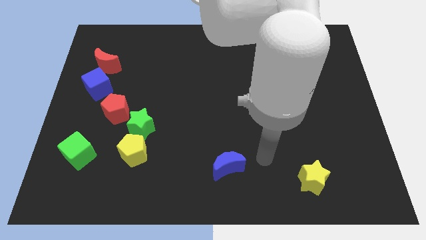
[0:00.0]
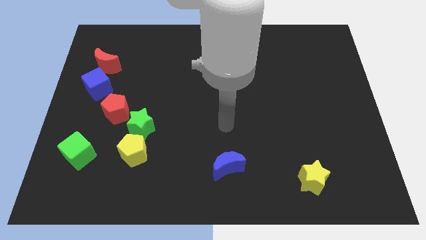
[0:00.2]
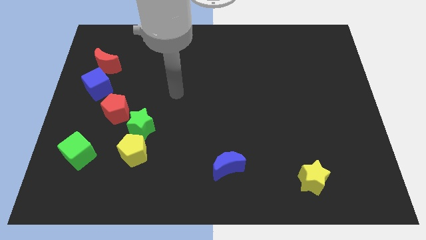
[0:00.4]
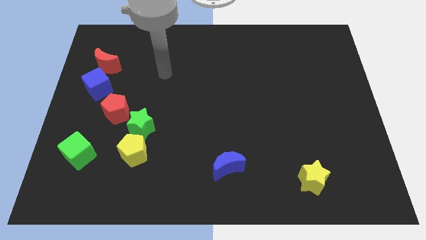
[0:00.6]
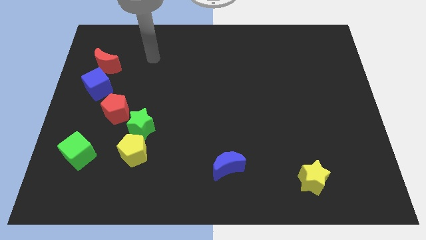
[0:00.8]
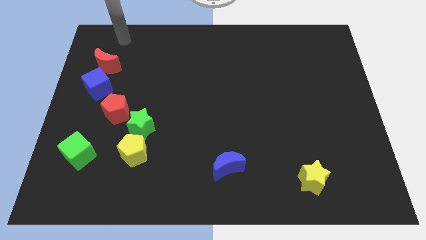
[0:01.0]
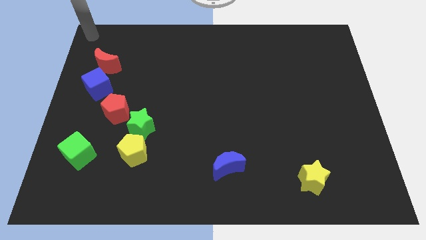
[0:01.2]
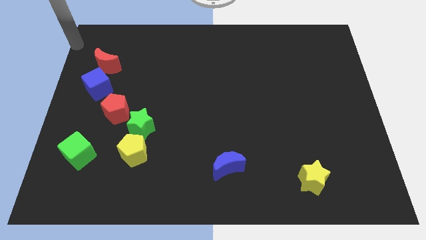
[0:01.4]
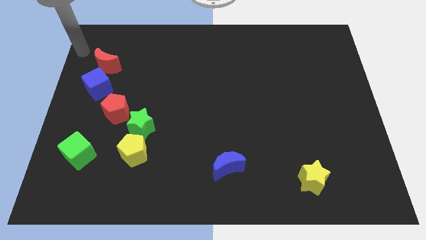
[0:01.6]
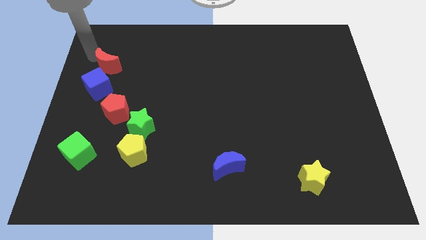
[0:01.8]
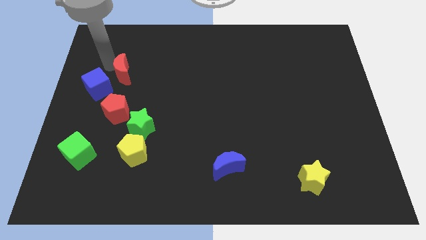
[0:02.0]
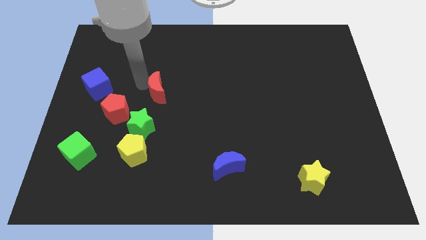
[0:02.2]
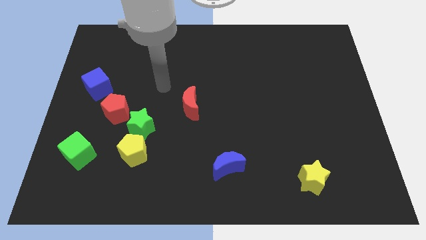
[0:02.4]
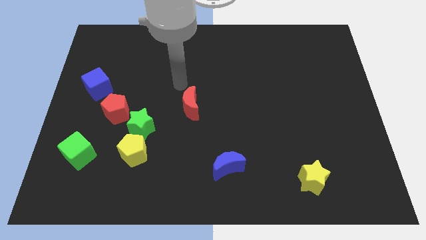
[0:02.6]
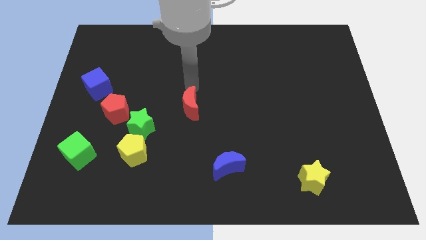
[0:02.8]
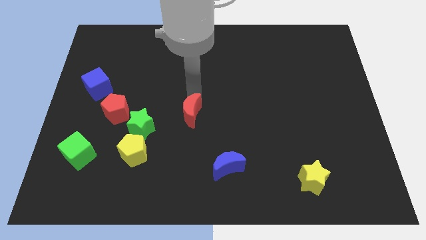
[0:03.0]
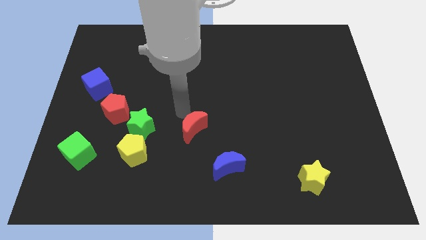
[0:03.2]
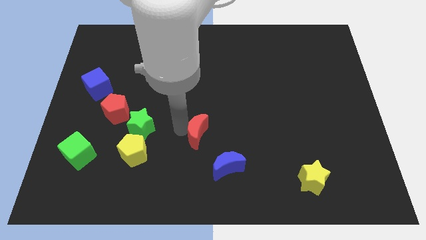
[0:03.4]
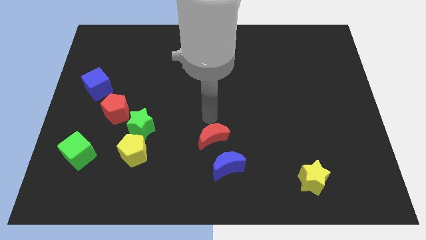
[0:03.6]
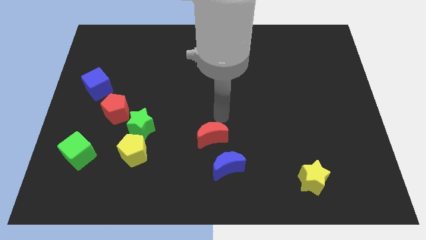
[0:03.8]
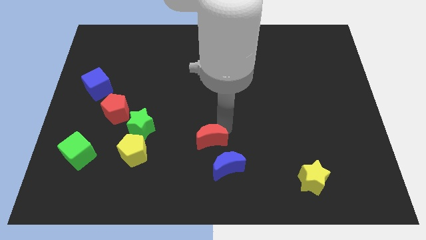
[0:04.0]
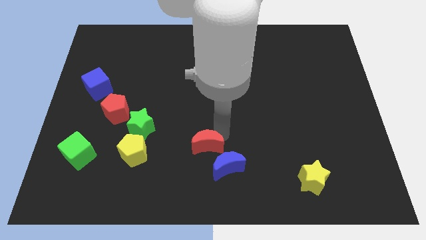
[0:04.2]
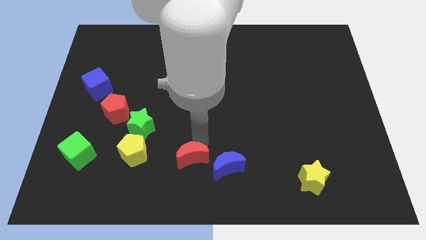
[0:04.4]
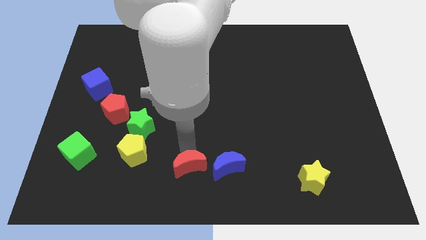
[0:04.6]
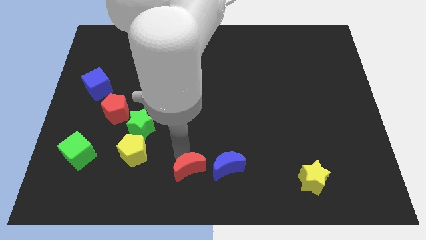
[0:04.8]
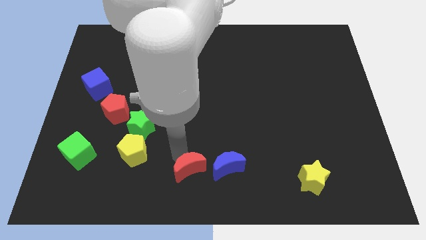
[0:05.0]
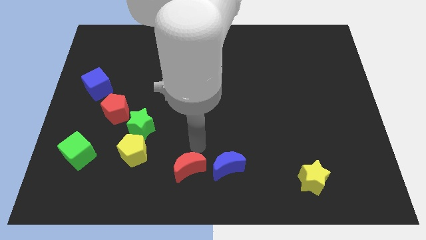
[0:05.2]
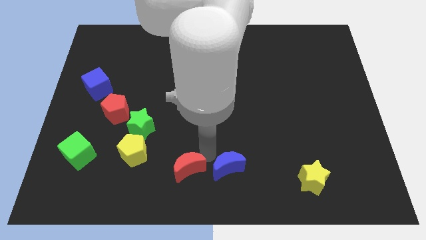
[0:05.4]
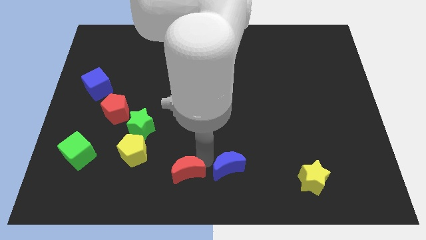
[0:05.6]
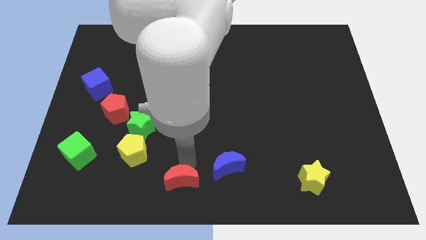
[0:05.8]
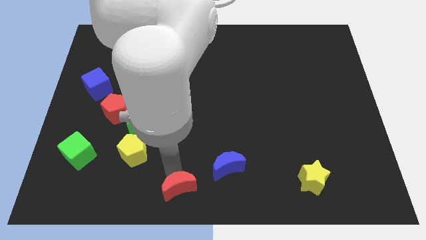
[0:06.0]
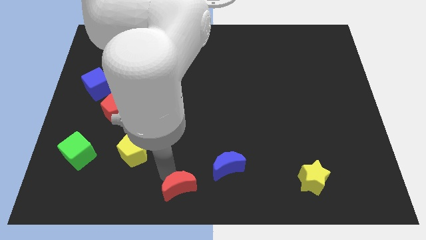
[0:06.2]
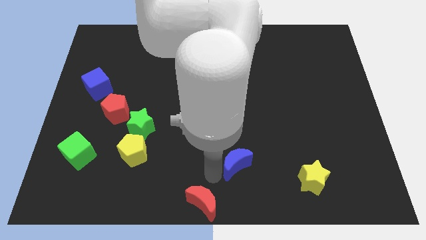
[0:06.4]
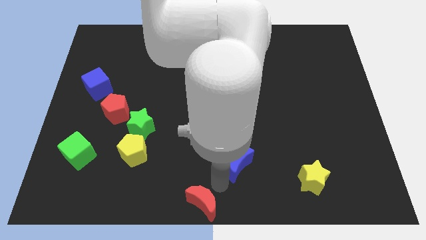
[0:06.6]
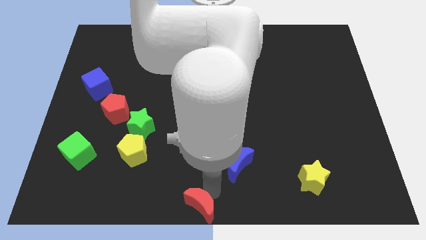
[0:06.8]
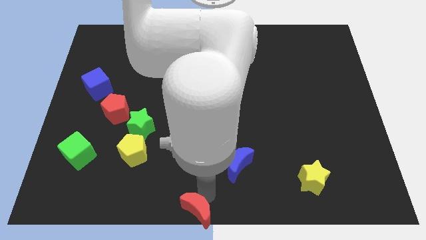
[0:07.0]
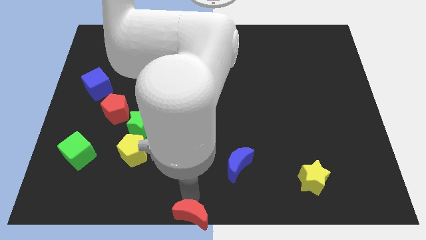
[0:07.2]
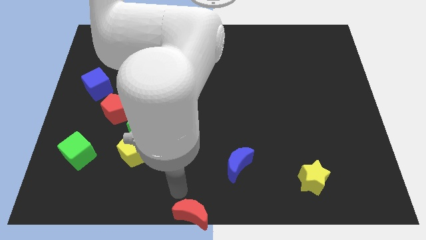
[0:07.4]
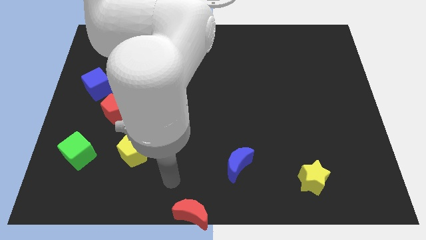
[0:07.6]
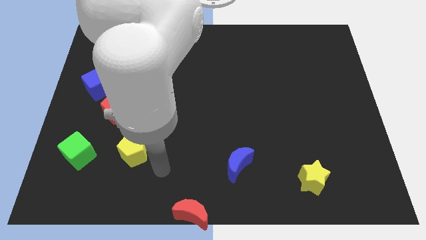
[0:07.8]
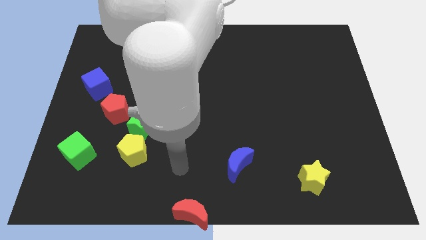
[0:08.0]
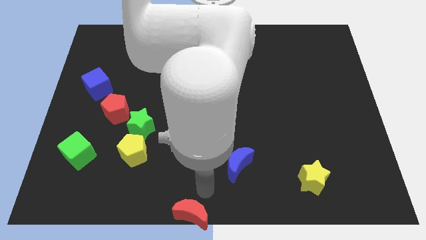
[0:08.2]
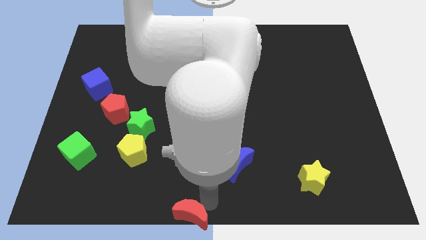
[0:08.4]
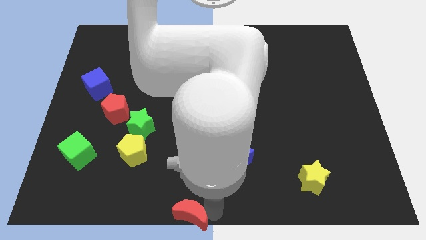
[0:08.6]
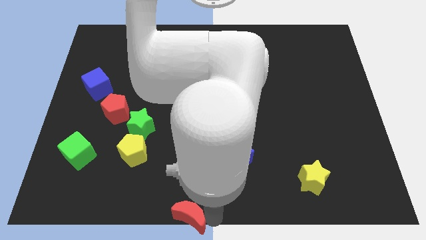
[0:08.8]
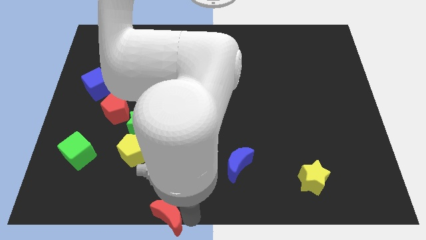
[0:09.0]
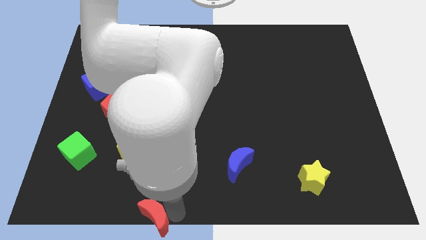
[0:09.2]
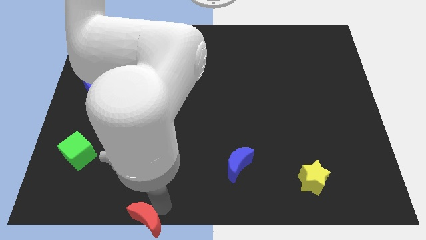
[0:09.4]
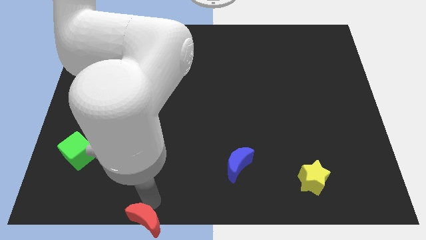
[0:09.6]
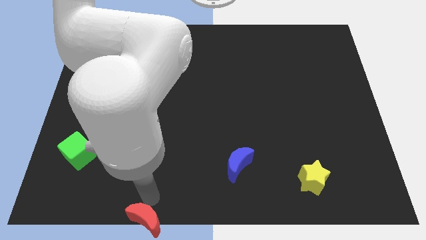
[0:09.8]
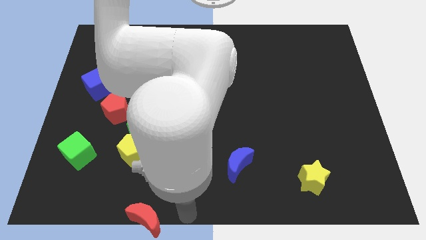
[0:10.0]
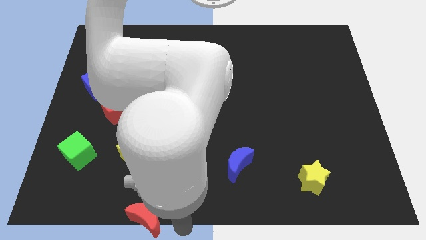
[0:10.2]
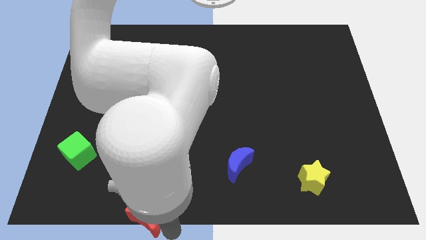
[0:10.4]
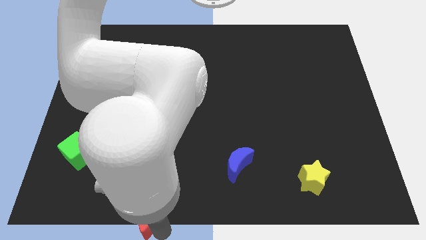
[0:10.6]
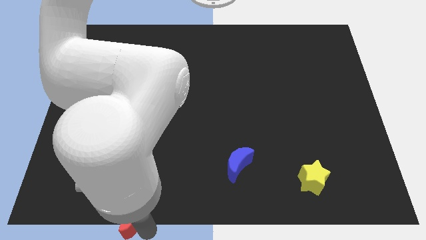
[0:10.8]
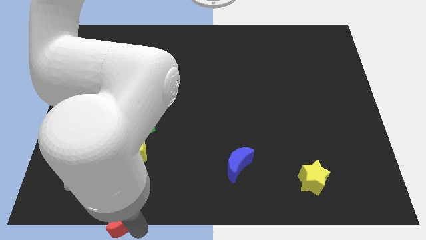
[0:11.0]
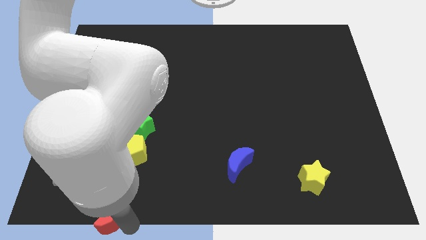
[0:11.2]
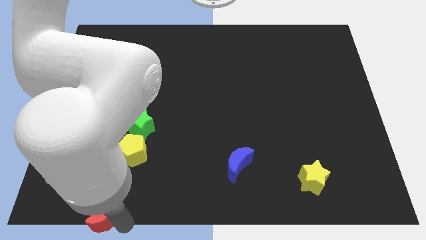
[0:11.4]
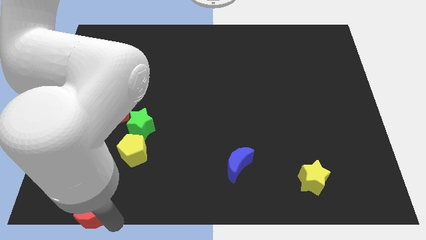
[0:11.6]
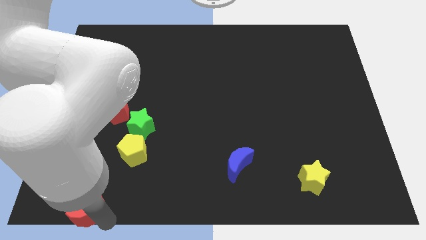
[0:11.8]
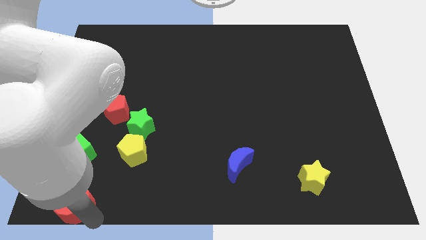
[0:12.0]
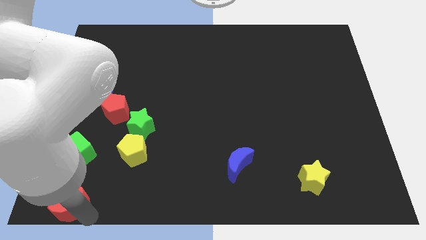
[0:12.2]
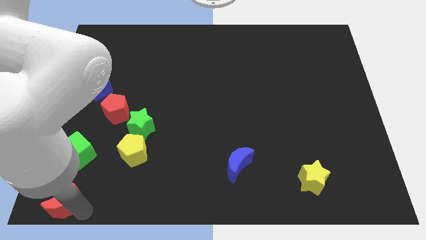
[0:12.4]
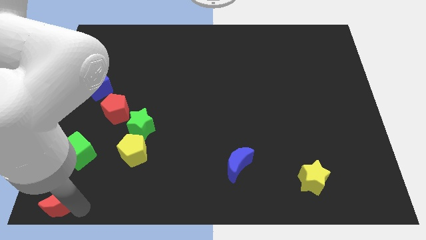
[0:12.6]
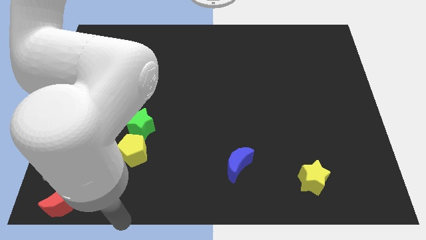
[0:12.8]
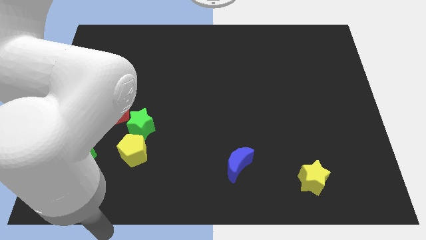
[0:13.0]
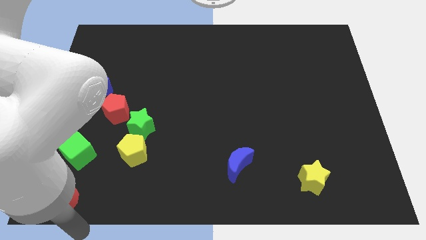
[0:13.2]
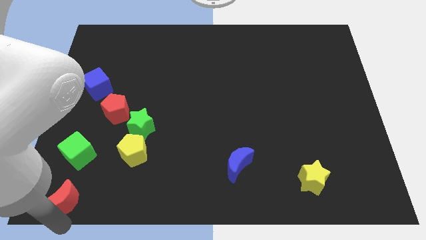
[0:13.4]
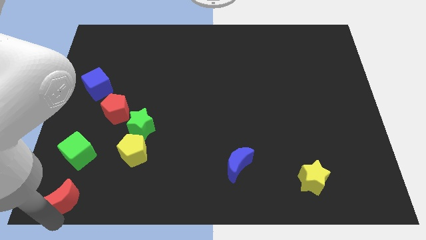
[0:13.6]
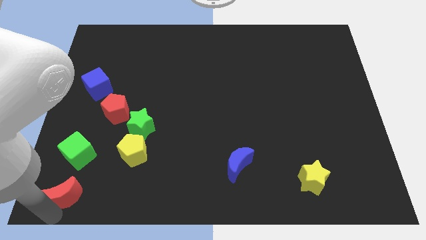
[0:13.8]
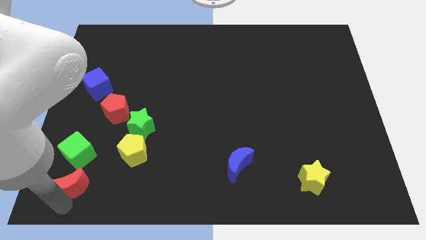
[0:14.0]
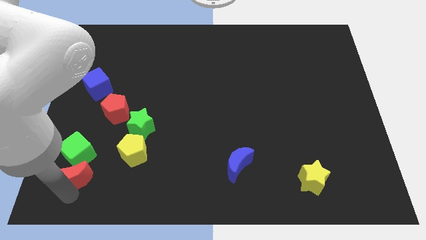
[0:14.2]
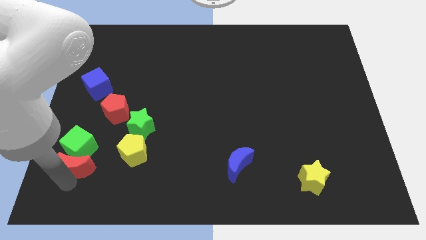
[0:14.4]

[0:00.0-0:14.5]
slide the red moon next to the green cube

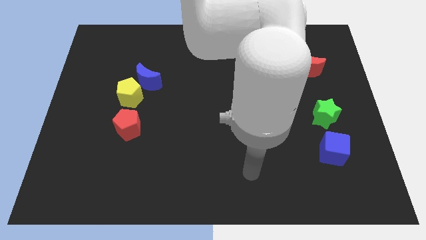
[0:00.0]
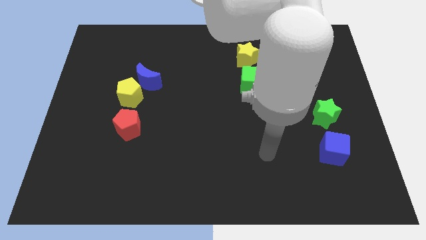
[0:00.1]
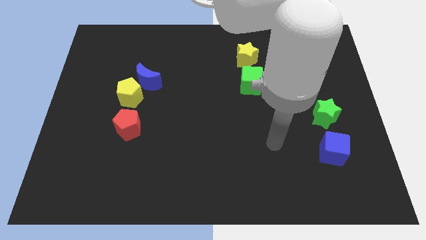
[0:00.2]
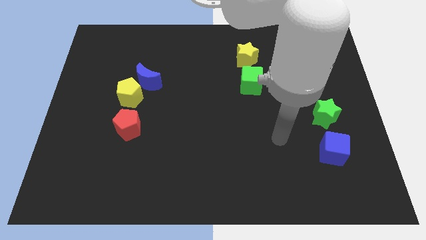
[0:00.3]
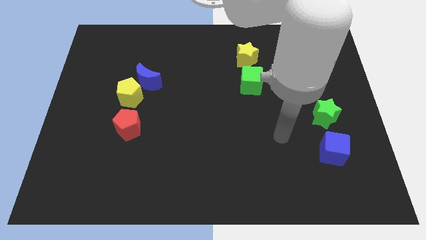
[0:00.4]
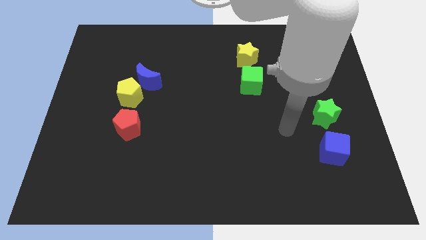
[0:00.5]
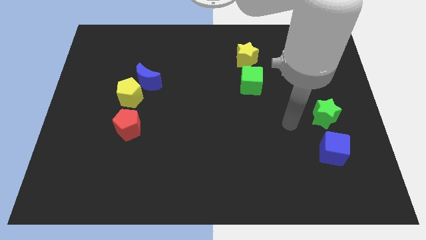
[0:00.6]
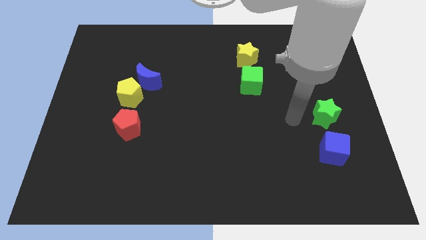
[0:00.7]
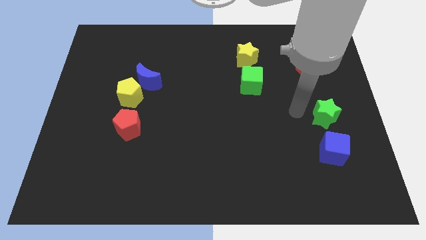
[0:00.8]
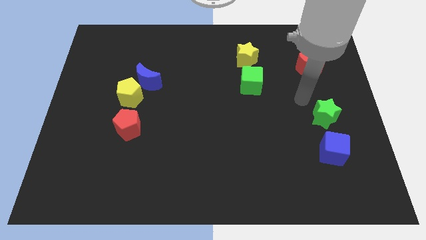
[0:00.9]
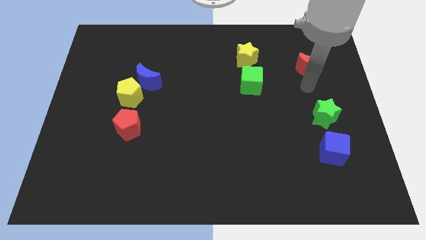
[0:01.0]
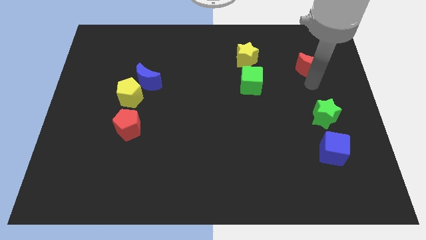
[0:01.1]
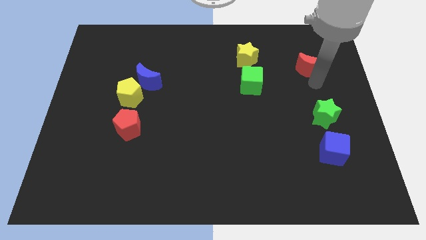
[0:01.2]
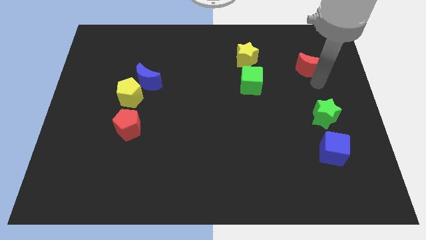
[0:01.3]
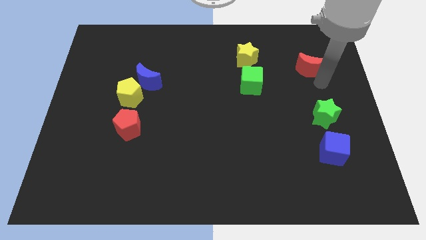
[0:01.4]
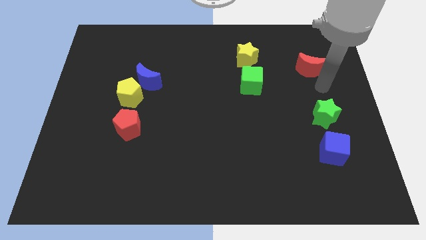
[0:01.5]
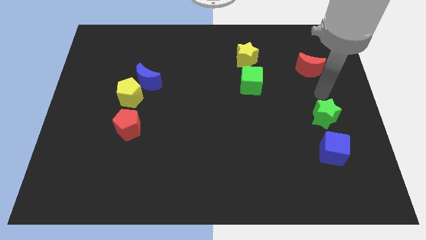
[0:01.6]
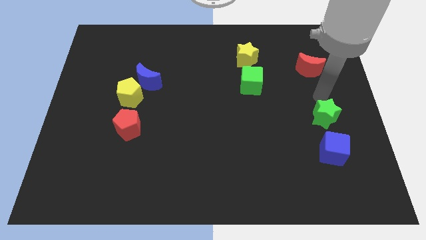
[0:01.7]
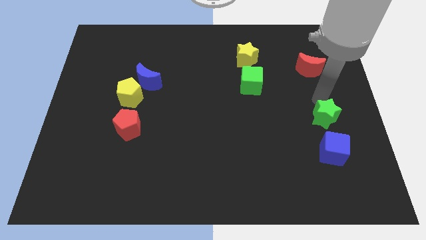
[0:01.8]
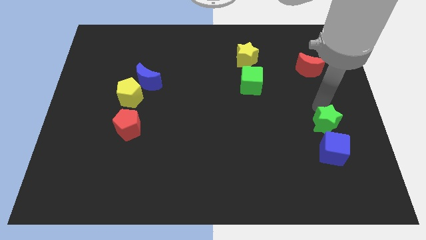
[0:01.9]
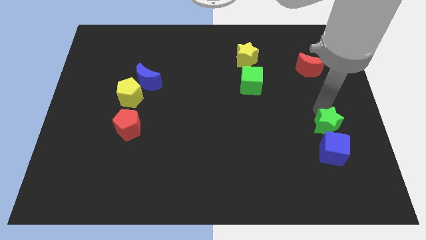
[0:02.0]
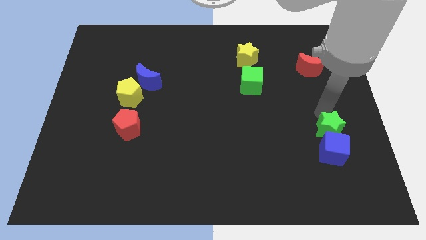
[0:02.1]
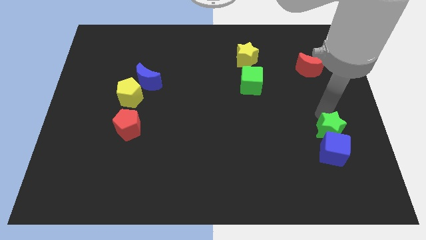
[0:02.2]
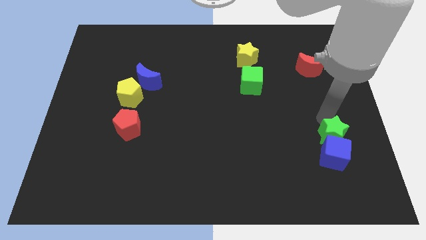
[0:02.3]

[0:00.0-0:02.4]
put the green star next to the blue cube
